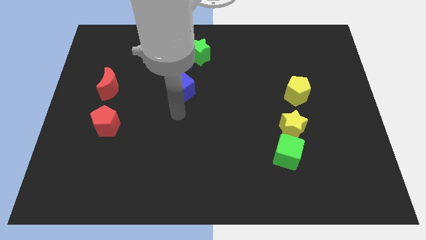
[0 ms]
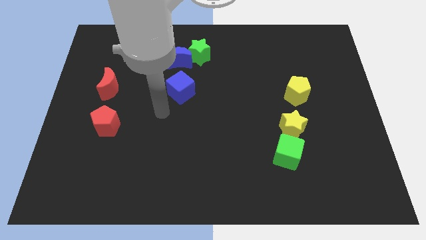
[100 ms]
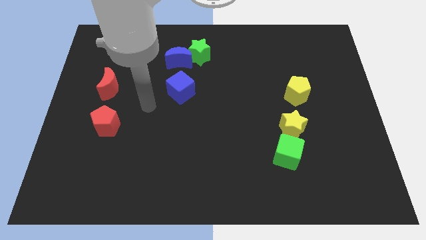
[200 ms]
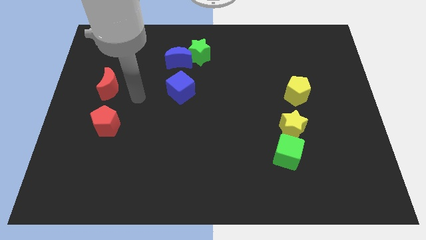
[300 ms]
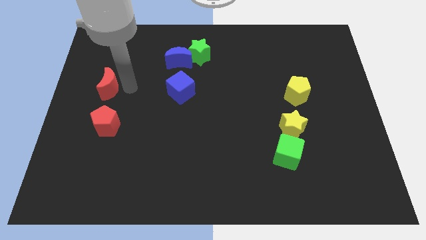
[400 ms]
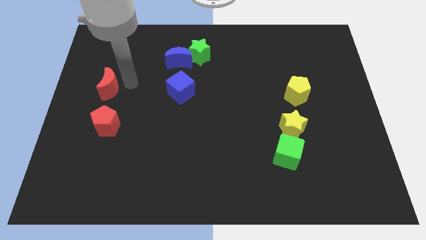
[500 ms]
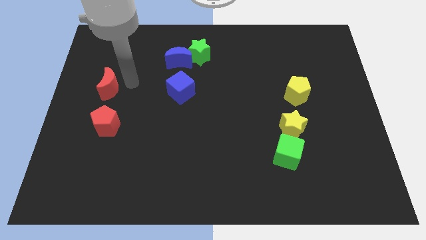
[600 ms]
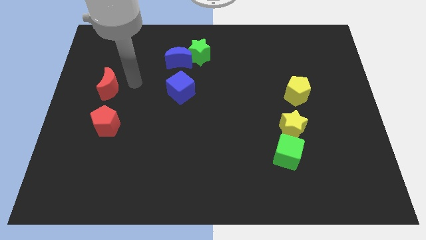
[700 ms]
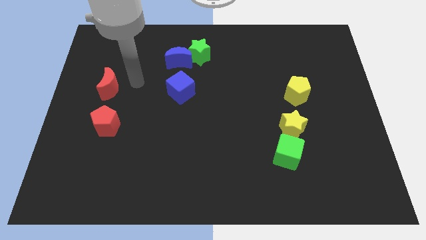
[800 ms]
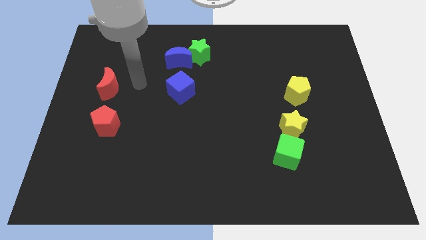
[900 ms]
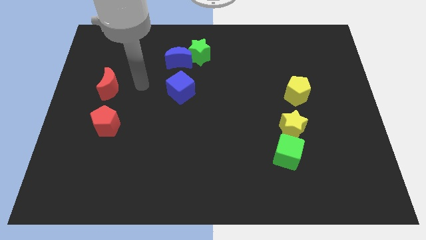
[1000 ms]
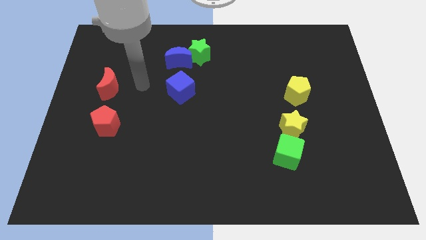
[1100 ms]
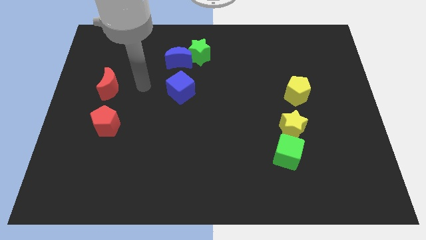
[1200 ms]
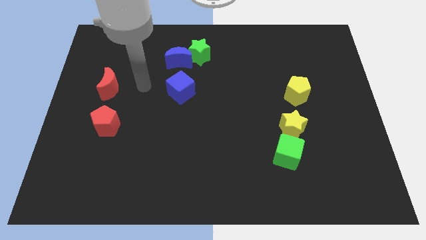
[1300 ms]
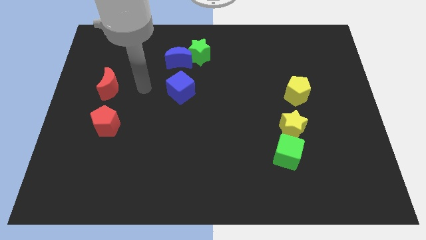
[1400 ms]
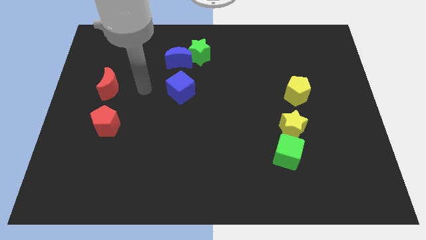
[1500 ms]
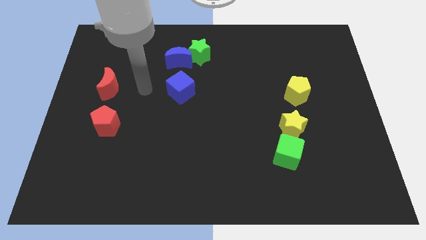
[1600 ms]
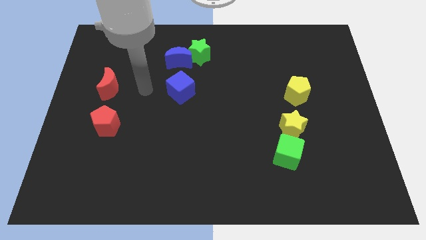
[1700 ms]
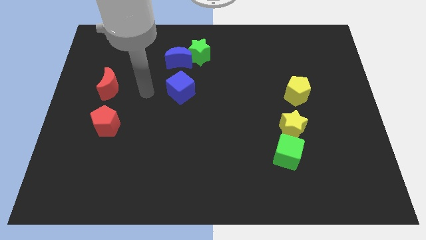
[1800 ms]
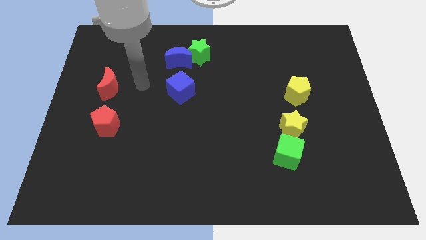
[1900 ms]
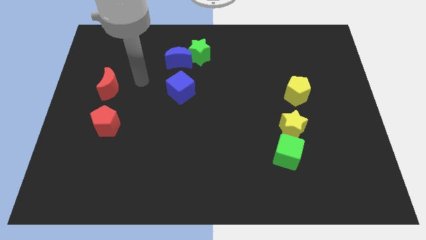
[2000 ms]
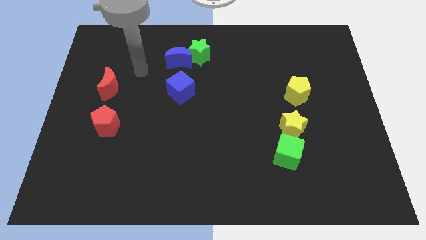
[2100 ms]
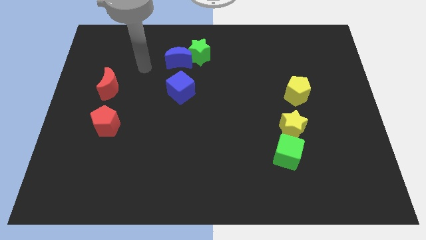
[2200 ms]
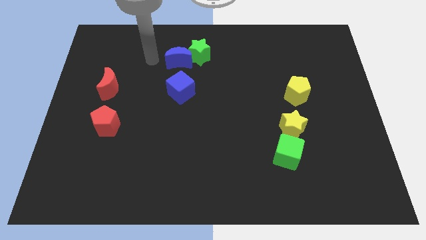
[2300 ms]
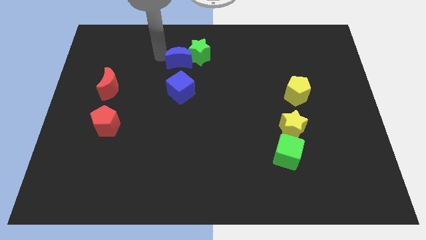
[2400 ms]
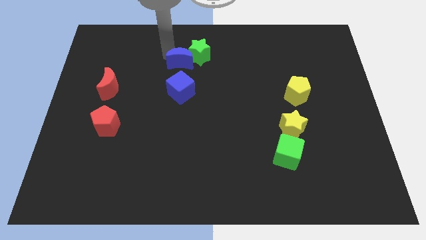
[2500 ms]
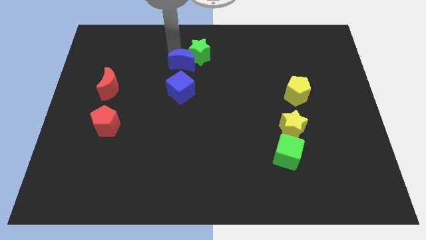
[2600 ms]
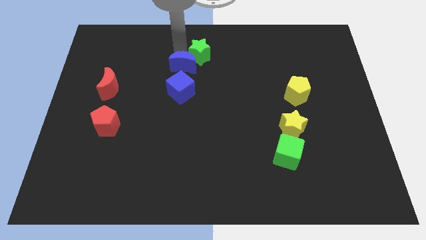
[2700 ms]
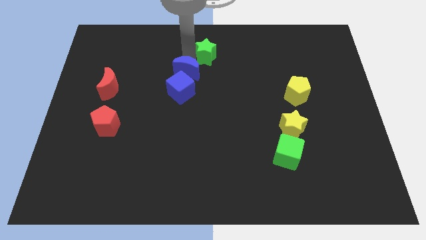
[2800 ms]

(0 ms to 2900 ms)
push the blue crescent close to the blue cube

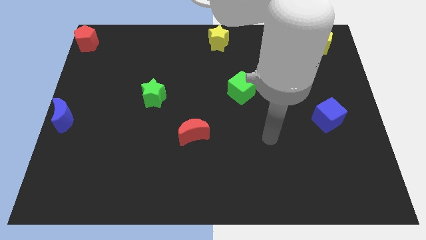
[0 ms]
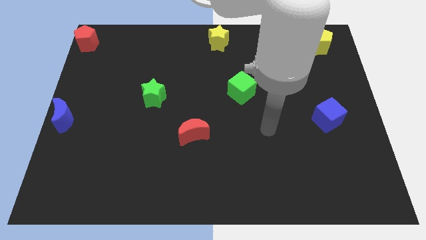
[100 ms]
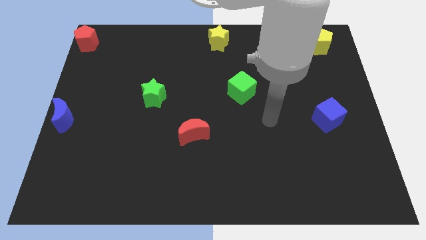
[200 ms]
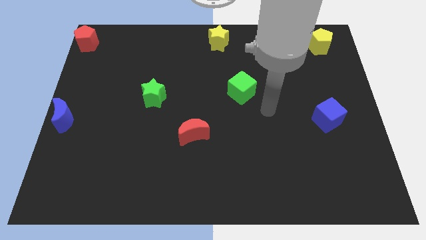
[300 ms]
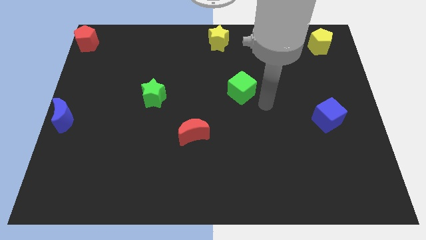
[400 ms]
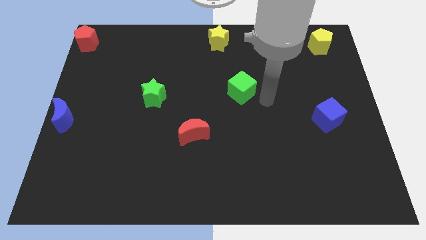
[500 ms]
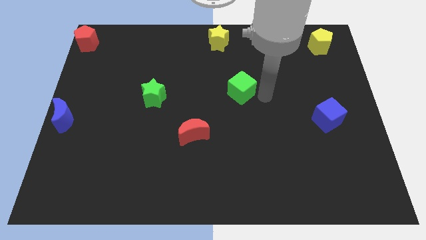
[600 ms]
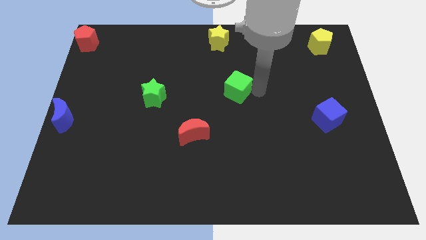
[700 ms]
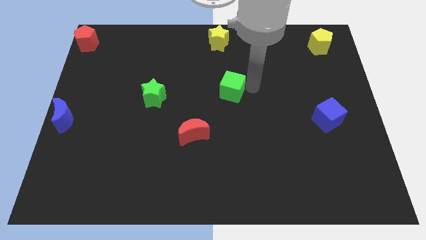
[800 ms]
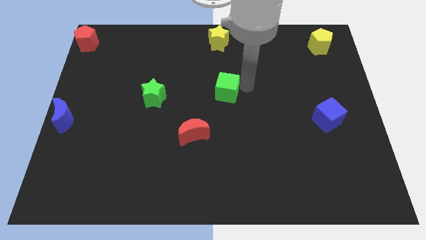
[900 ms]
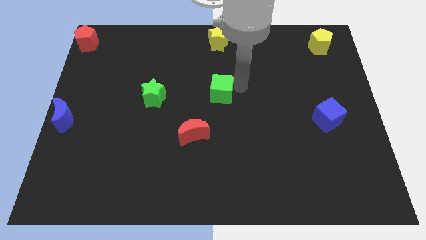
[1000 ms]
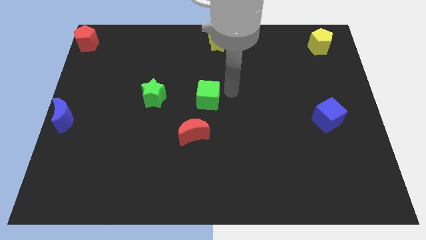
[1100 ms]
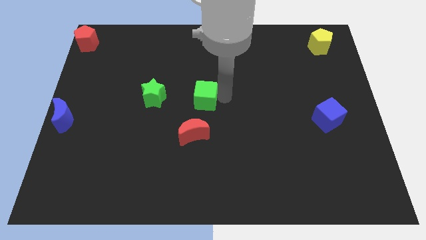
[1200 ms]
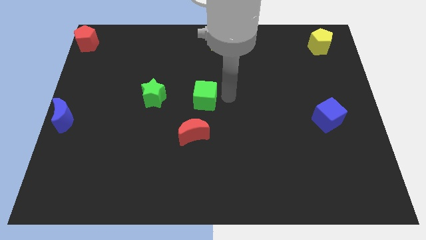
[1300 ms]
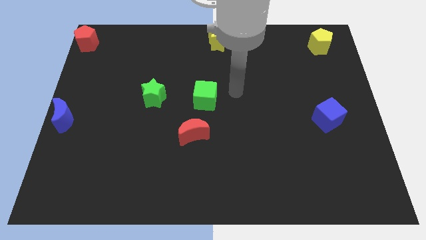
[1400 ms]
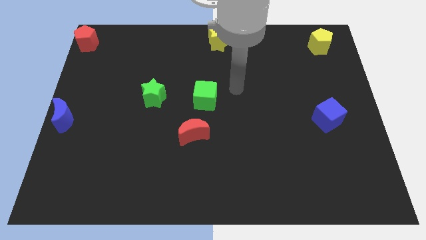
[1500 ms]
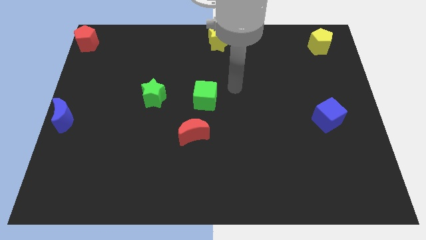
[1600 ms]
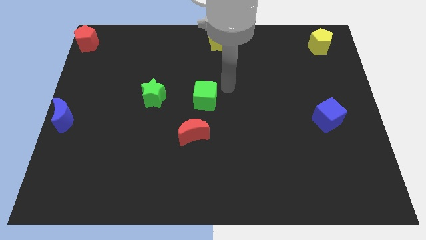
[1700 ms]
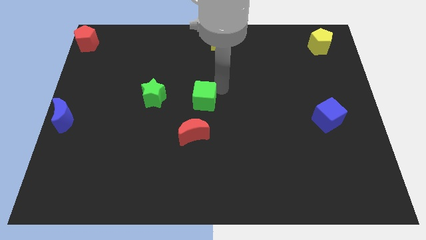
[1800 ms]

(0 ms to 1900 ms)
place a green cube towards the center of the board

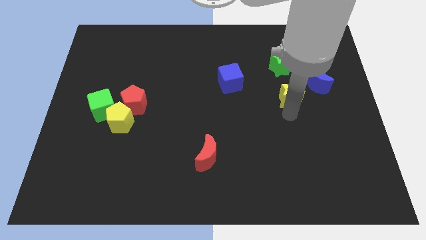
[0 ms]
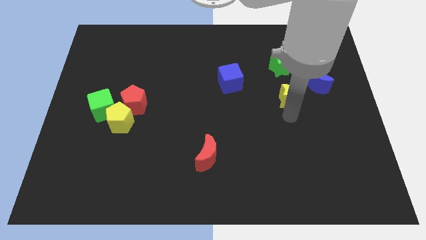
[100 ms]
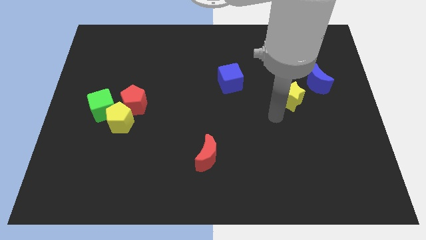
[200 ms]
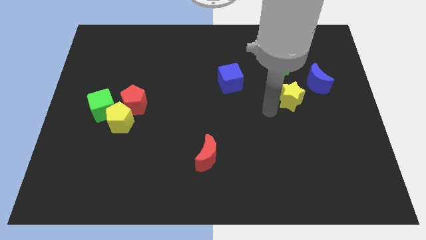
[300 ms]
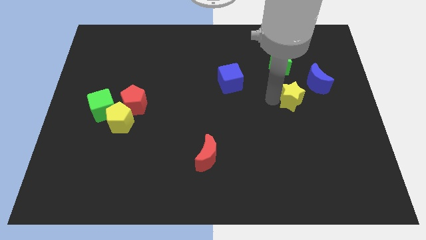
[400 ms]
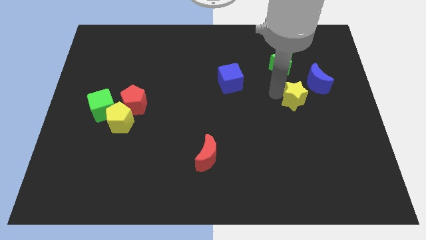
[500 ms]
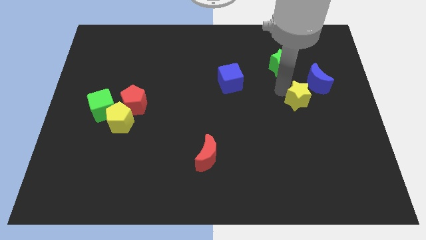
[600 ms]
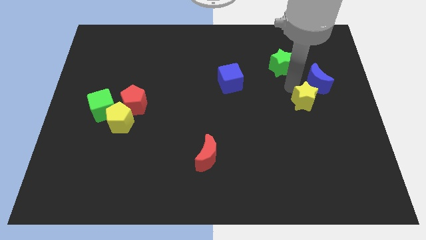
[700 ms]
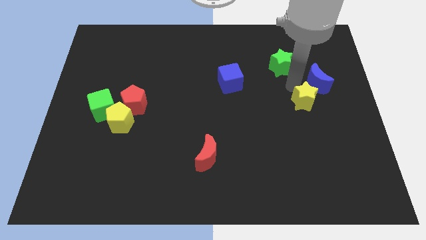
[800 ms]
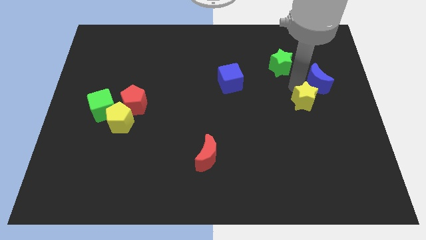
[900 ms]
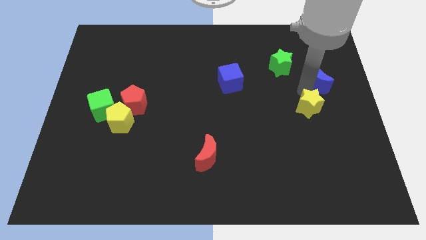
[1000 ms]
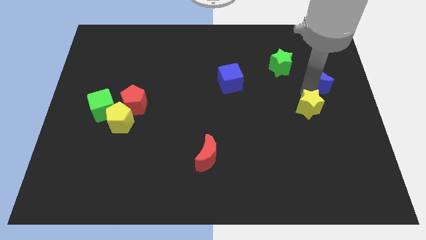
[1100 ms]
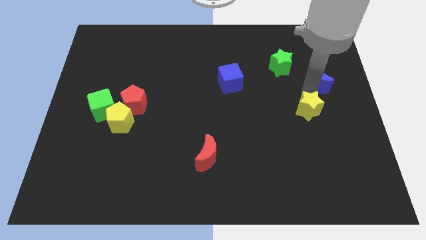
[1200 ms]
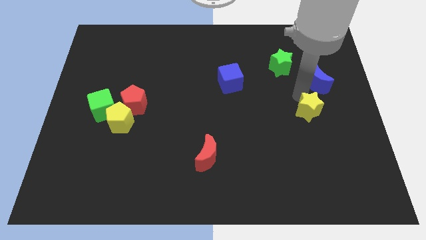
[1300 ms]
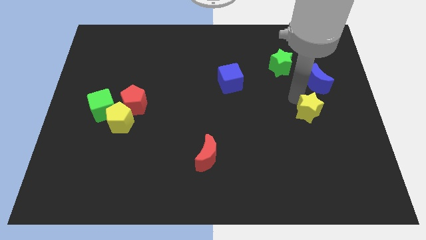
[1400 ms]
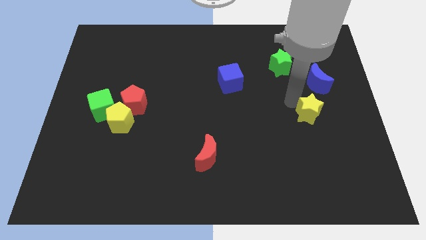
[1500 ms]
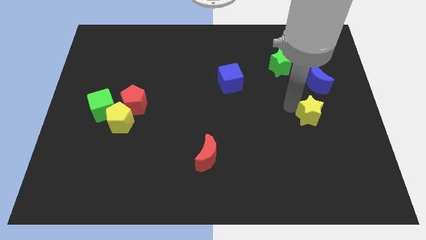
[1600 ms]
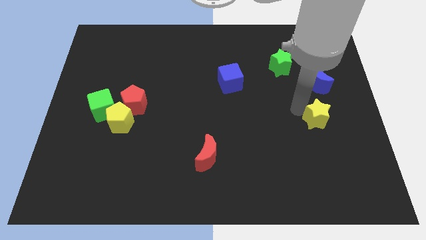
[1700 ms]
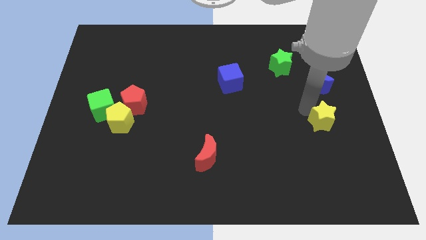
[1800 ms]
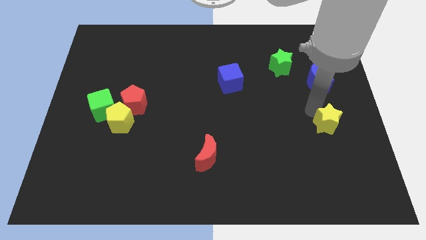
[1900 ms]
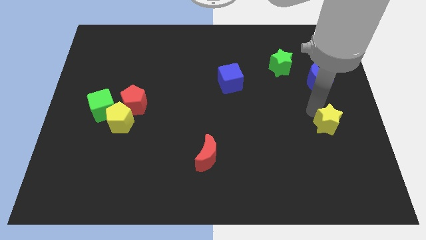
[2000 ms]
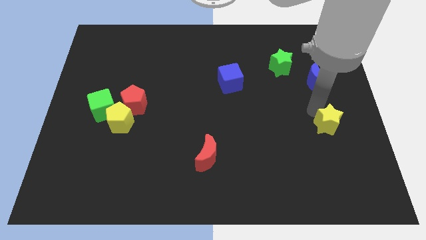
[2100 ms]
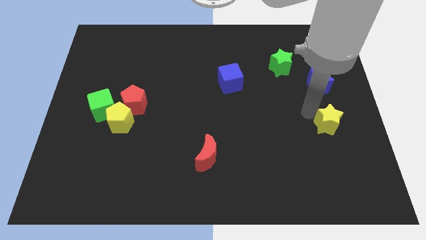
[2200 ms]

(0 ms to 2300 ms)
move the yellow star down to the board below to the blue crescent

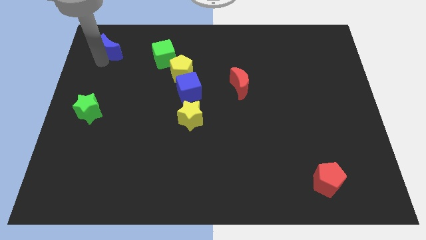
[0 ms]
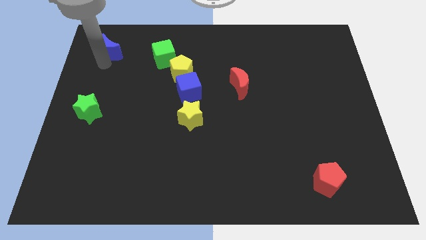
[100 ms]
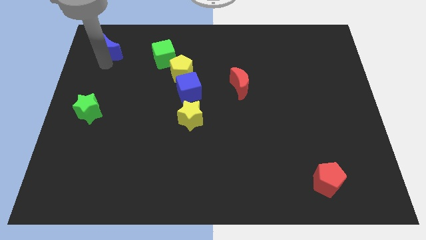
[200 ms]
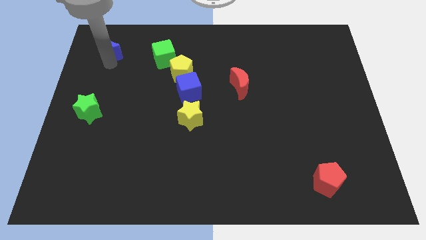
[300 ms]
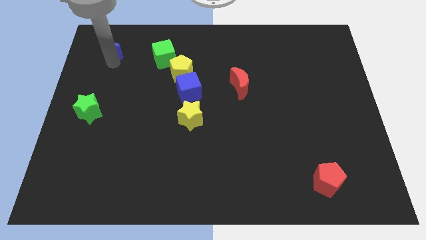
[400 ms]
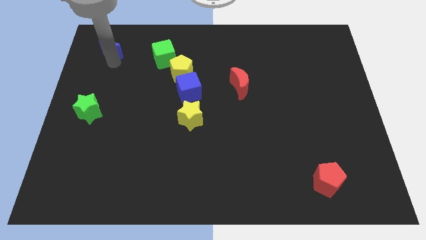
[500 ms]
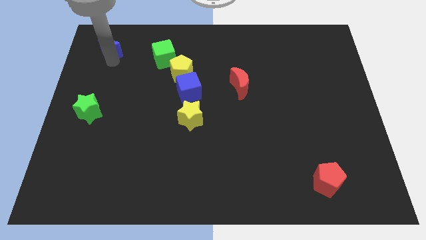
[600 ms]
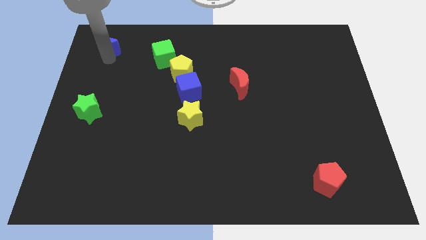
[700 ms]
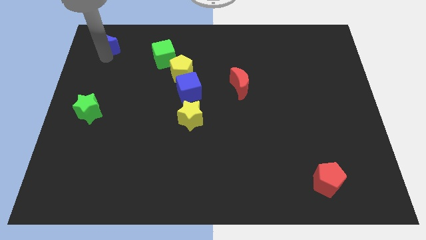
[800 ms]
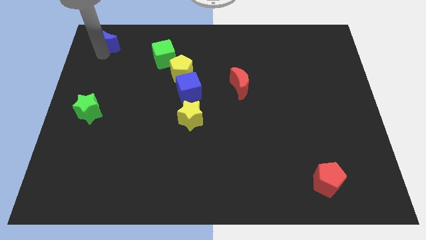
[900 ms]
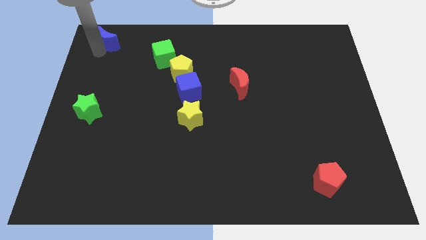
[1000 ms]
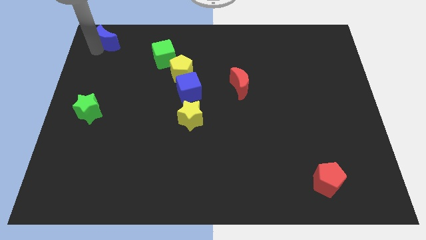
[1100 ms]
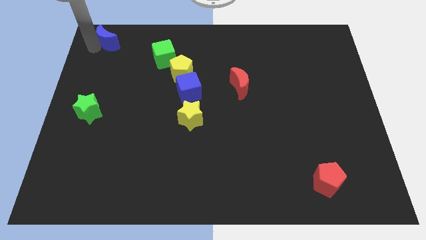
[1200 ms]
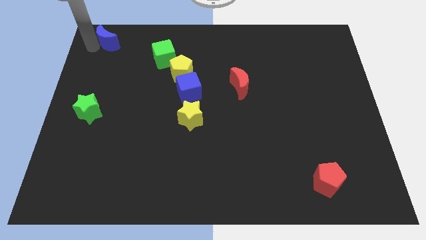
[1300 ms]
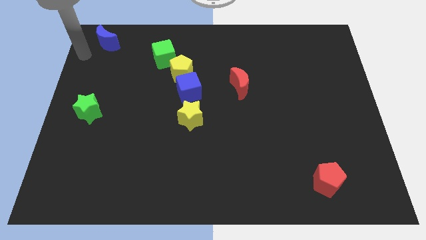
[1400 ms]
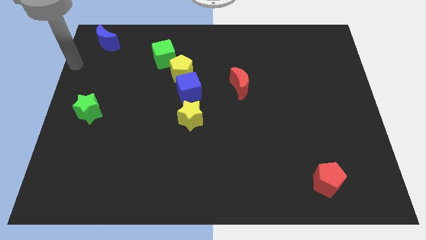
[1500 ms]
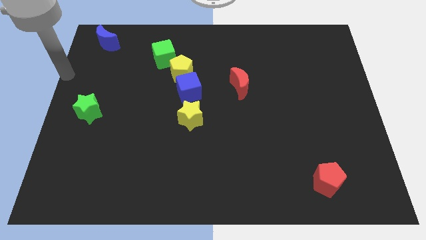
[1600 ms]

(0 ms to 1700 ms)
push the blue crescent towards top left corner of the board
